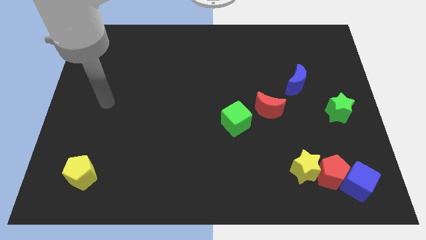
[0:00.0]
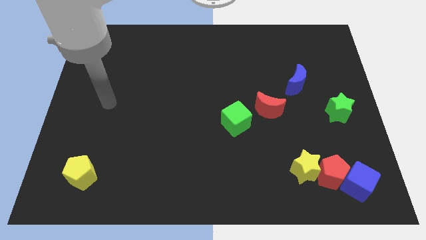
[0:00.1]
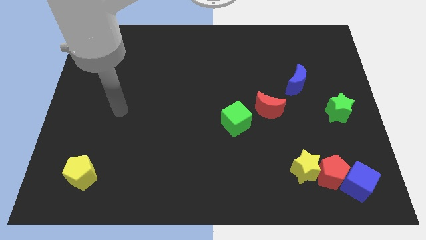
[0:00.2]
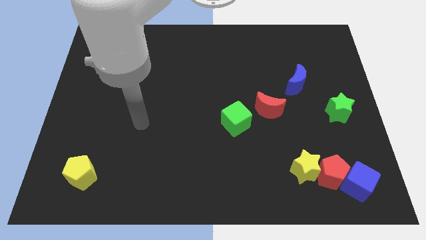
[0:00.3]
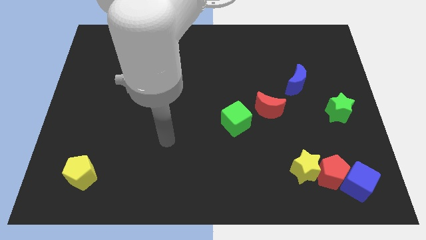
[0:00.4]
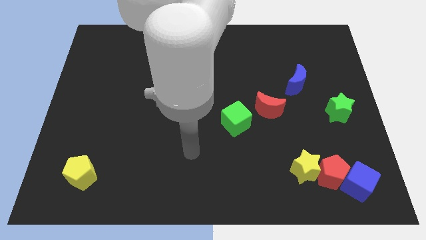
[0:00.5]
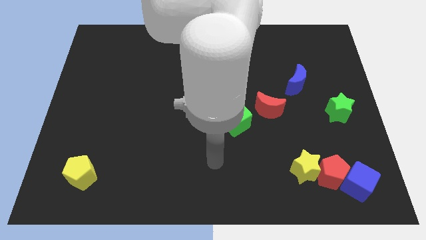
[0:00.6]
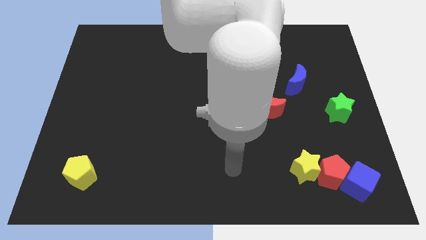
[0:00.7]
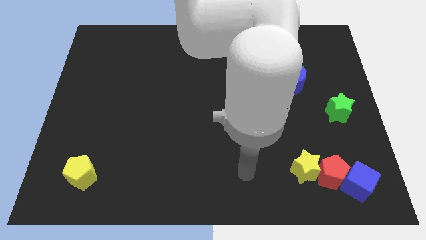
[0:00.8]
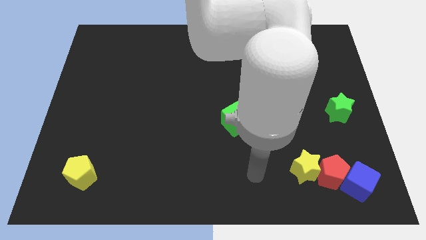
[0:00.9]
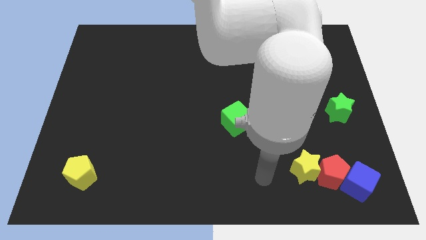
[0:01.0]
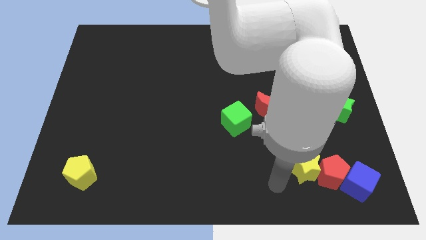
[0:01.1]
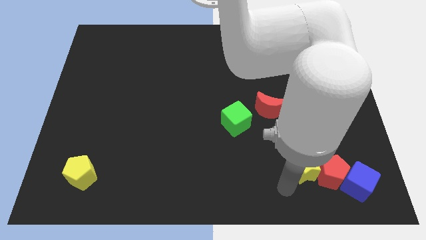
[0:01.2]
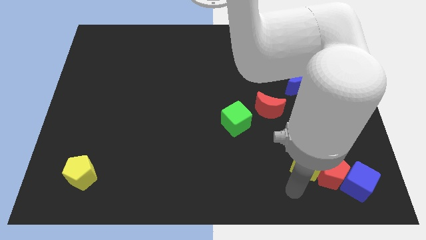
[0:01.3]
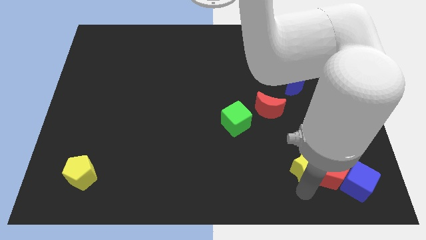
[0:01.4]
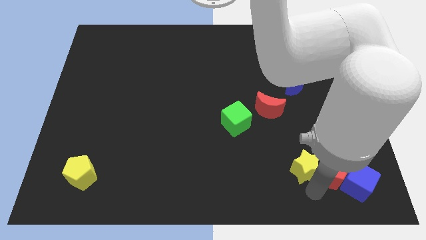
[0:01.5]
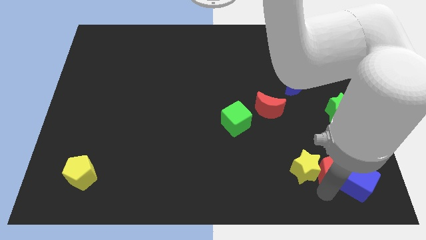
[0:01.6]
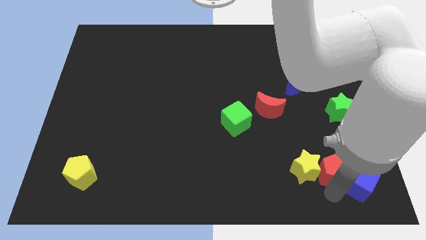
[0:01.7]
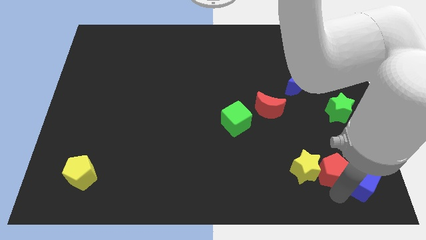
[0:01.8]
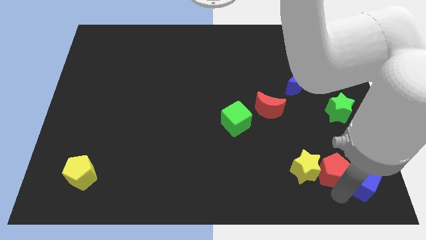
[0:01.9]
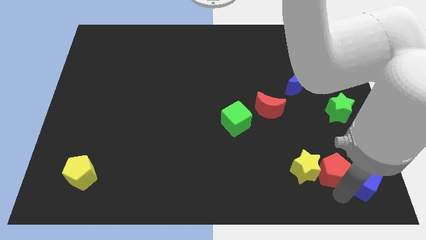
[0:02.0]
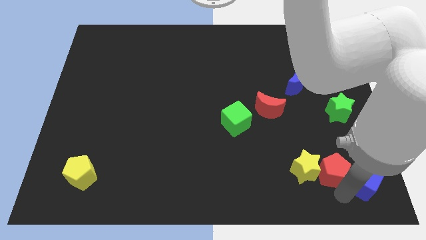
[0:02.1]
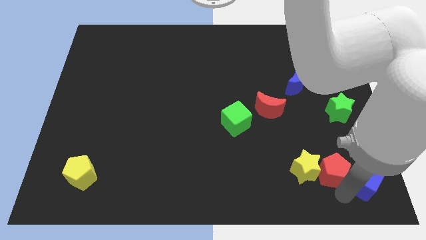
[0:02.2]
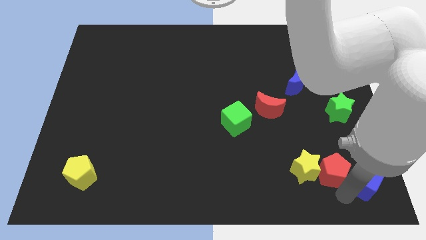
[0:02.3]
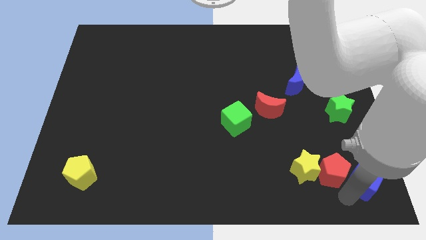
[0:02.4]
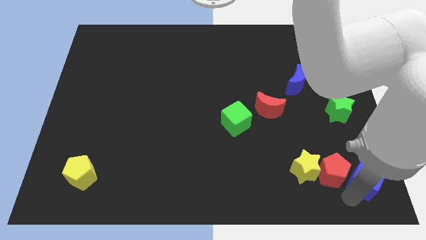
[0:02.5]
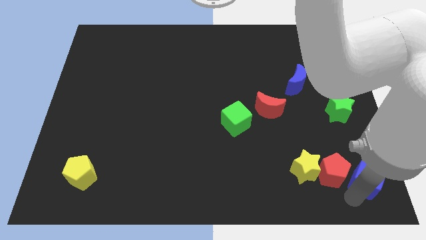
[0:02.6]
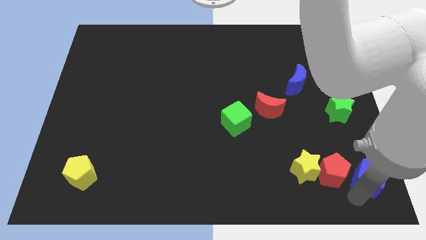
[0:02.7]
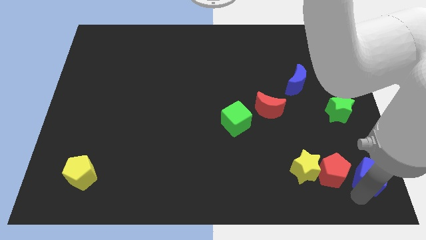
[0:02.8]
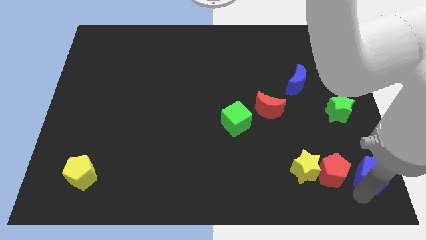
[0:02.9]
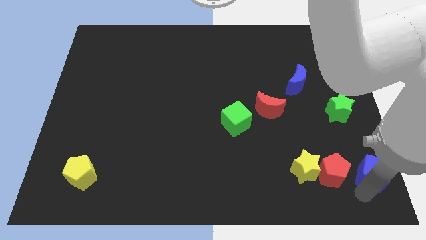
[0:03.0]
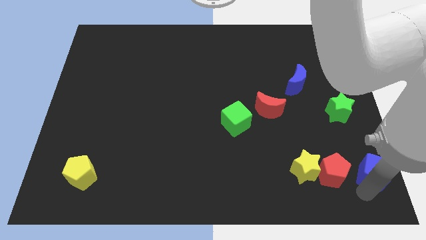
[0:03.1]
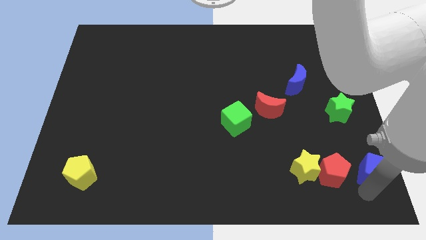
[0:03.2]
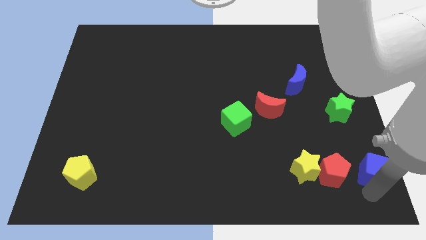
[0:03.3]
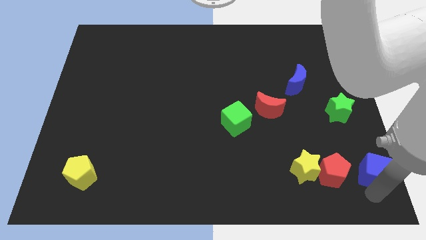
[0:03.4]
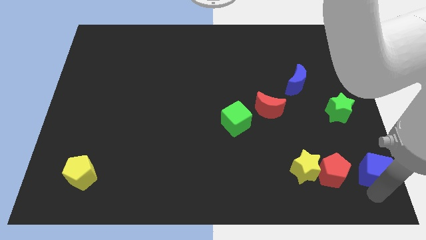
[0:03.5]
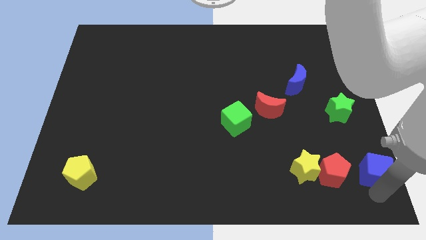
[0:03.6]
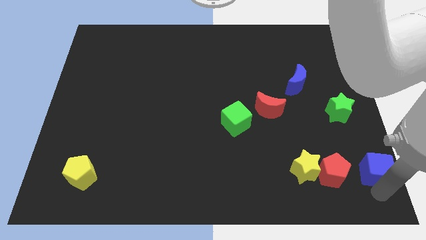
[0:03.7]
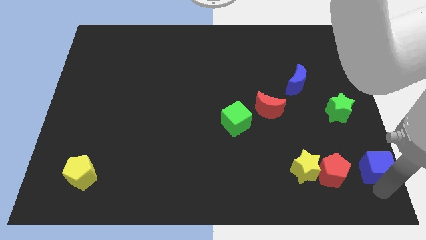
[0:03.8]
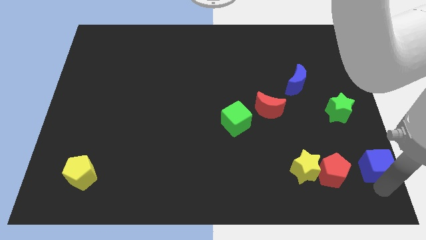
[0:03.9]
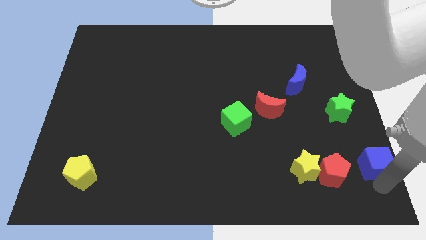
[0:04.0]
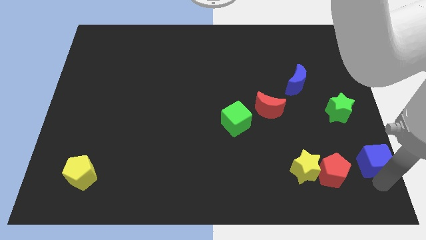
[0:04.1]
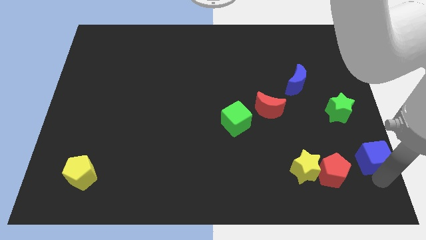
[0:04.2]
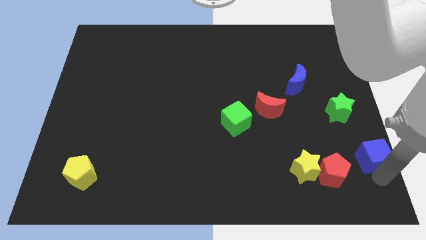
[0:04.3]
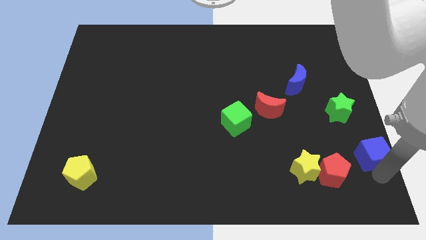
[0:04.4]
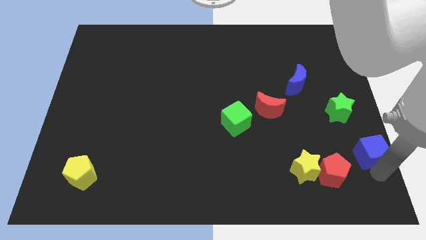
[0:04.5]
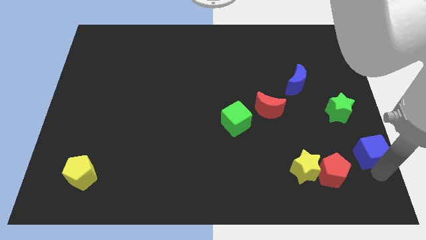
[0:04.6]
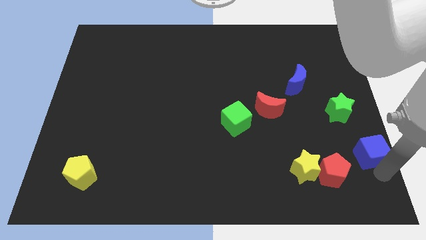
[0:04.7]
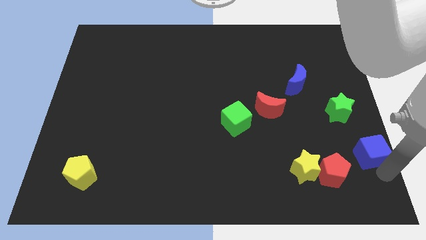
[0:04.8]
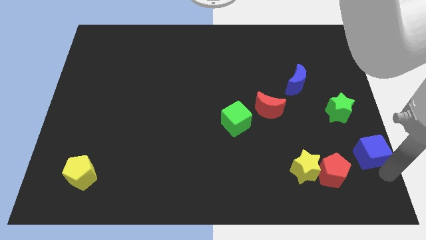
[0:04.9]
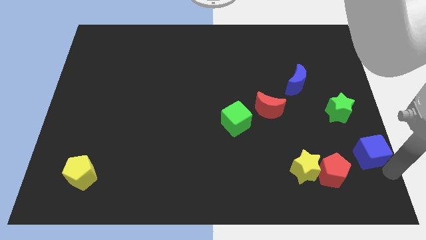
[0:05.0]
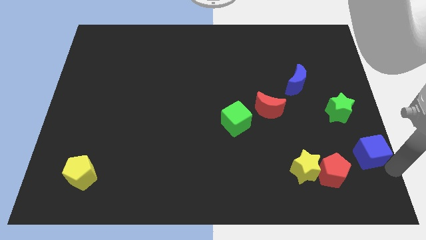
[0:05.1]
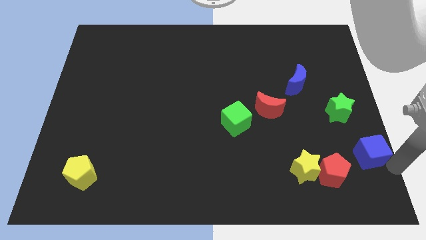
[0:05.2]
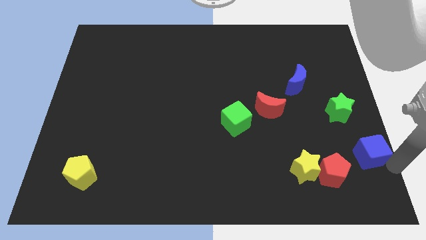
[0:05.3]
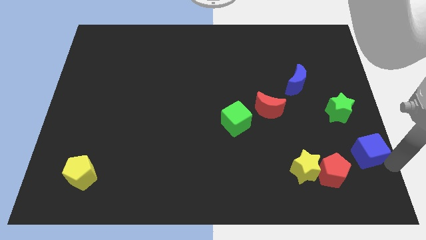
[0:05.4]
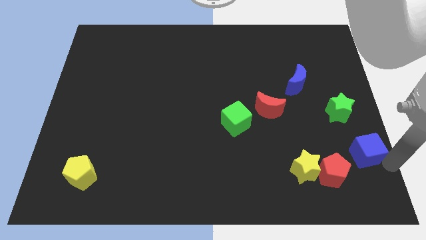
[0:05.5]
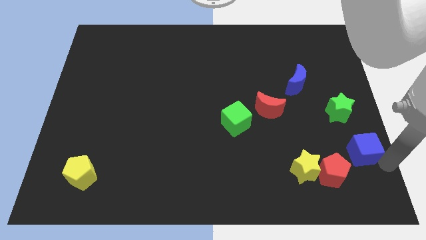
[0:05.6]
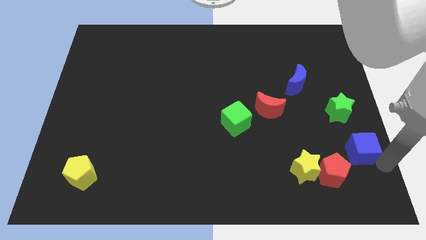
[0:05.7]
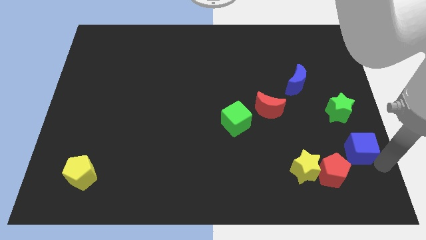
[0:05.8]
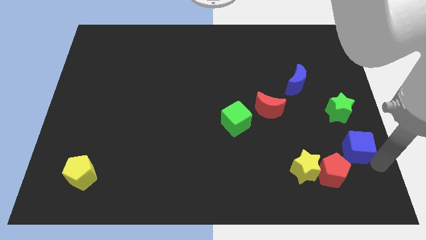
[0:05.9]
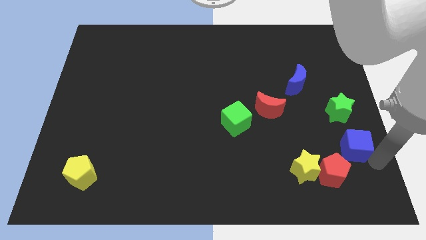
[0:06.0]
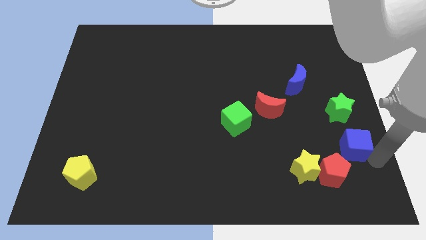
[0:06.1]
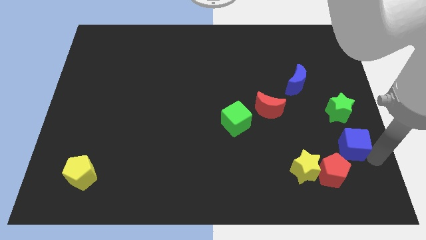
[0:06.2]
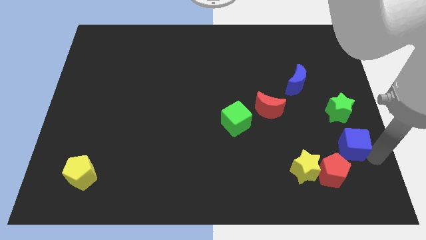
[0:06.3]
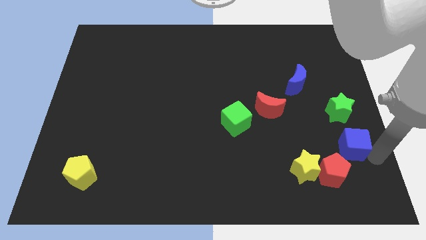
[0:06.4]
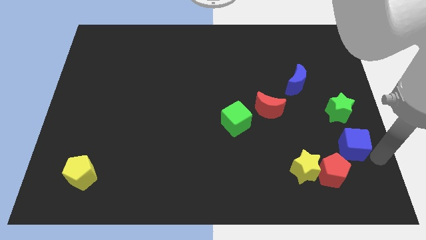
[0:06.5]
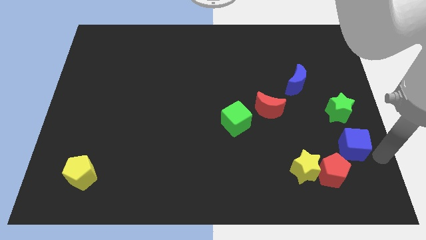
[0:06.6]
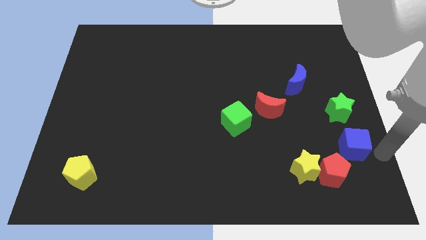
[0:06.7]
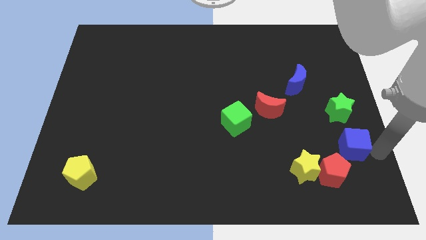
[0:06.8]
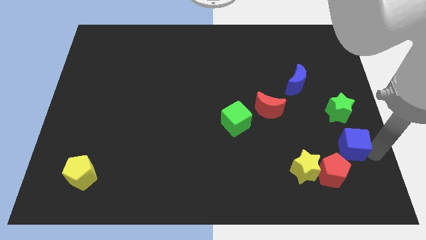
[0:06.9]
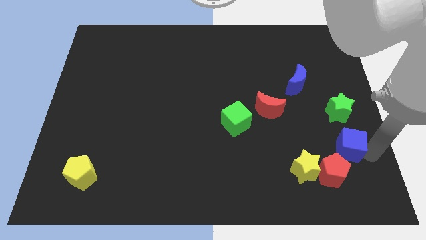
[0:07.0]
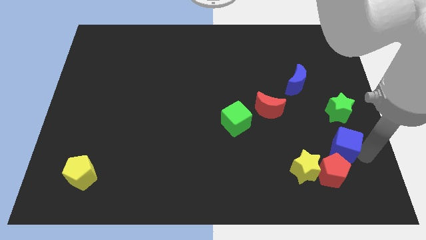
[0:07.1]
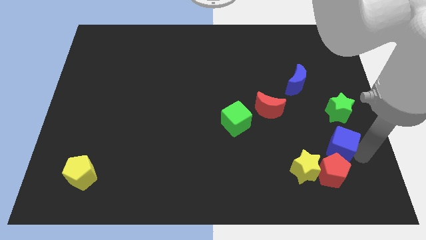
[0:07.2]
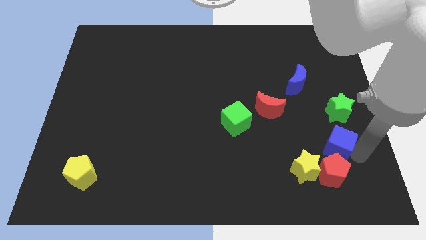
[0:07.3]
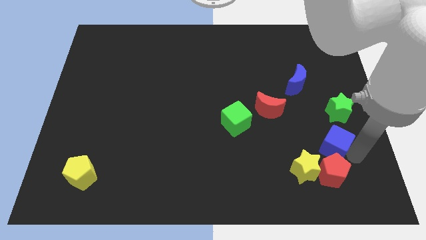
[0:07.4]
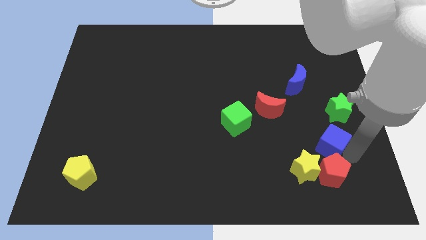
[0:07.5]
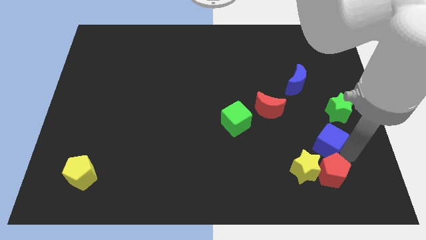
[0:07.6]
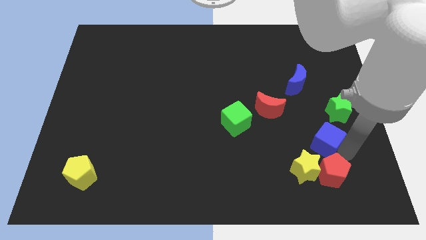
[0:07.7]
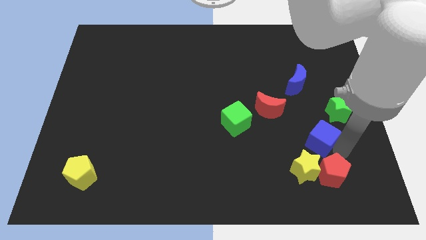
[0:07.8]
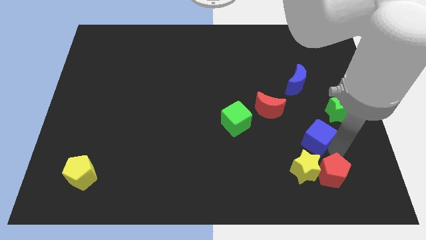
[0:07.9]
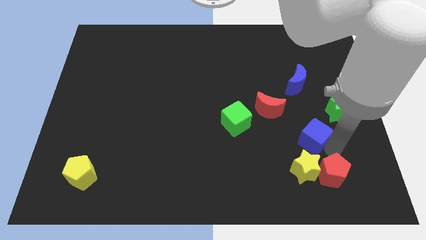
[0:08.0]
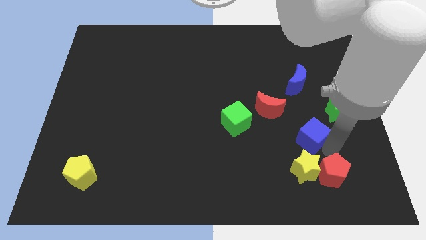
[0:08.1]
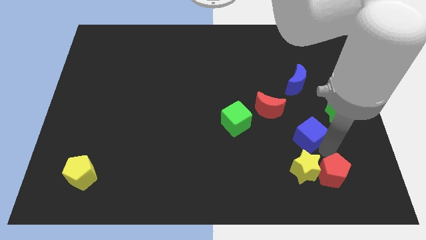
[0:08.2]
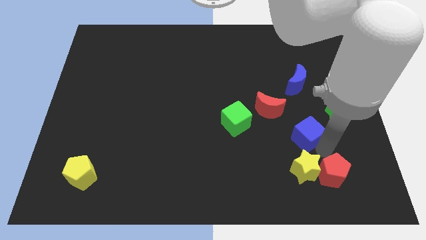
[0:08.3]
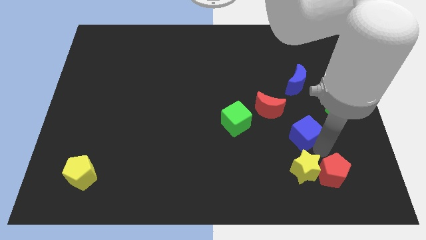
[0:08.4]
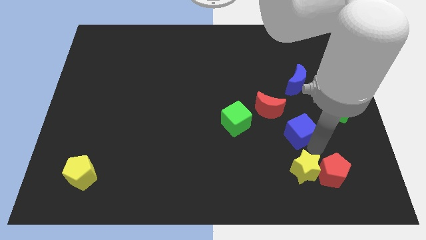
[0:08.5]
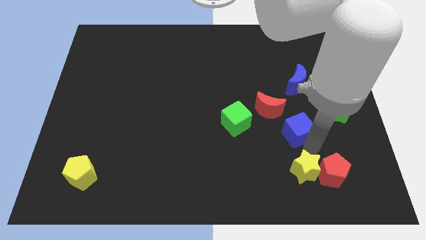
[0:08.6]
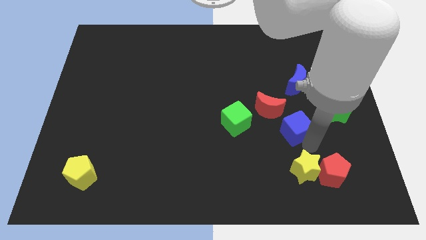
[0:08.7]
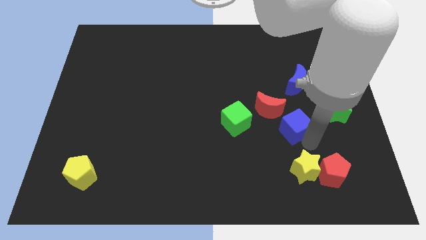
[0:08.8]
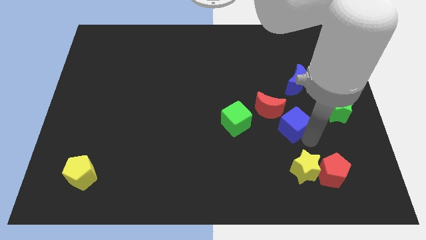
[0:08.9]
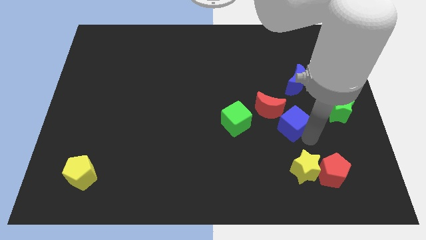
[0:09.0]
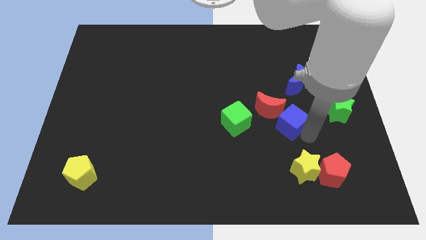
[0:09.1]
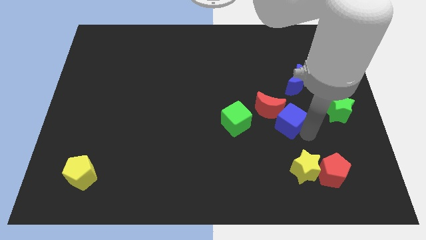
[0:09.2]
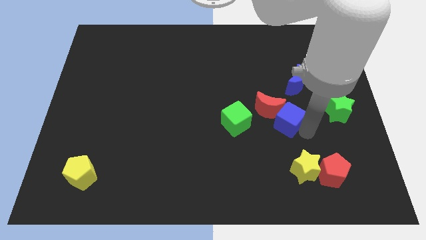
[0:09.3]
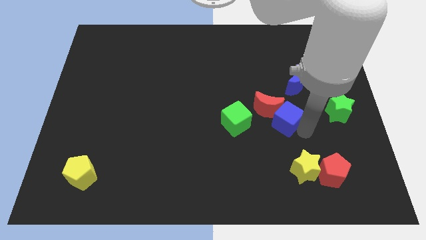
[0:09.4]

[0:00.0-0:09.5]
put the blue cube towards the red moon
